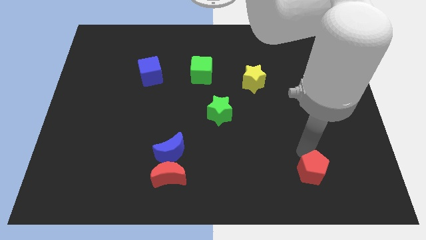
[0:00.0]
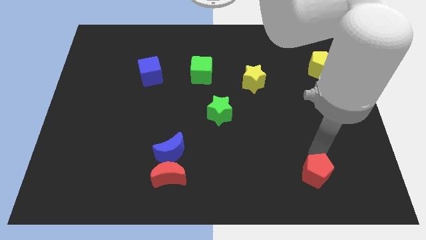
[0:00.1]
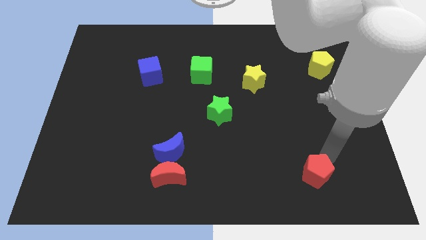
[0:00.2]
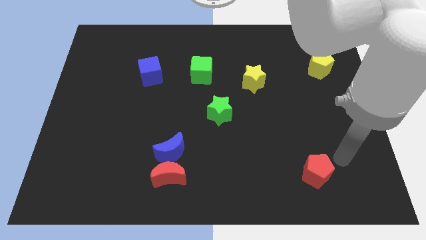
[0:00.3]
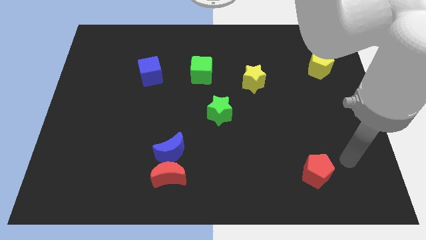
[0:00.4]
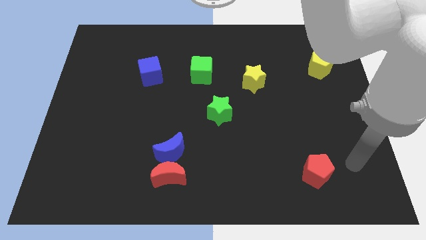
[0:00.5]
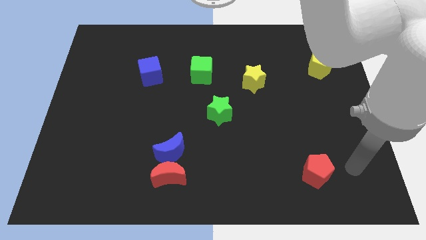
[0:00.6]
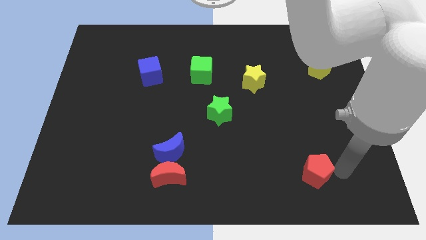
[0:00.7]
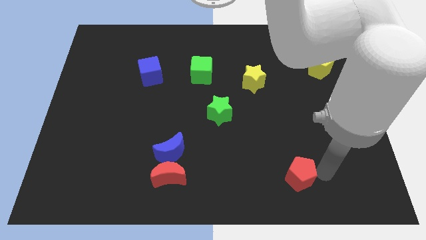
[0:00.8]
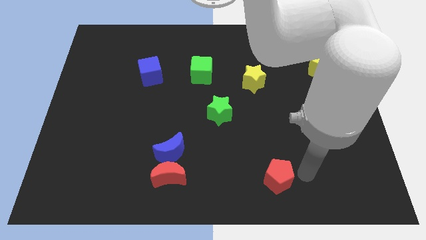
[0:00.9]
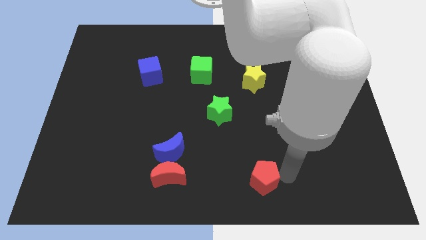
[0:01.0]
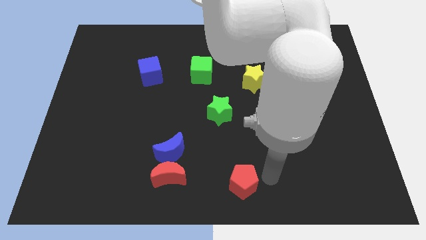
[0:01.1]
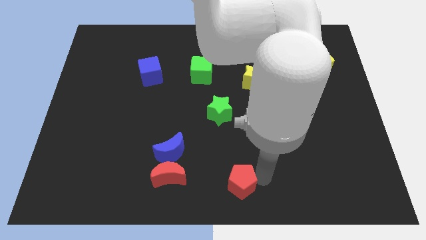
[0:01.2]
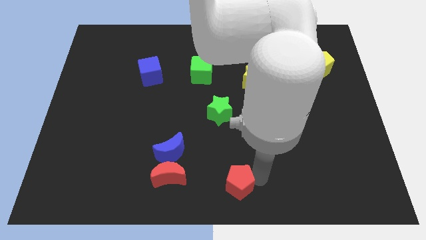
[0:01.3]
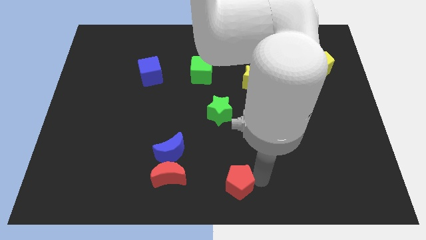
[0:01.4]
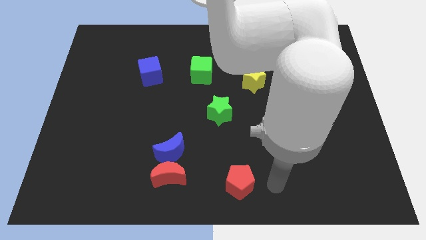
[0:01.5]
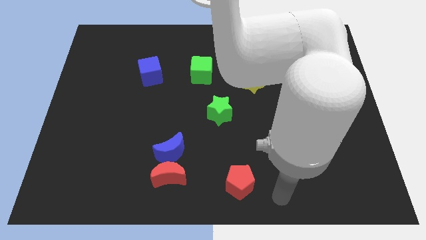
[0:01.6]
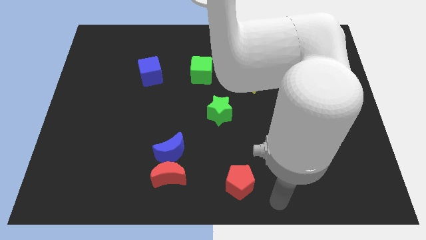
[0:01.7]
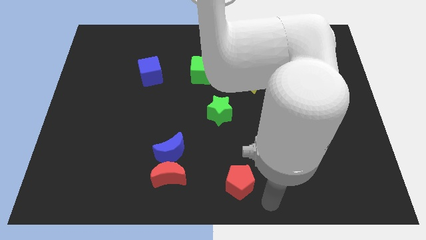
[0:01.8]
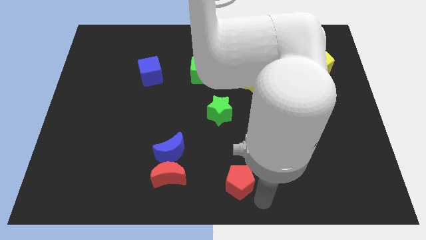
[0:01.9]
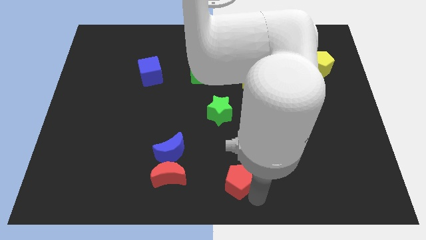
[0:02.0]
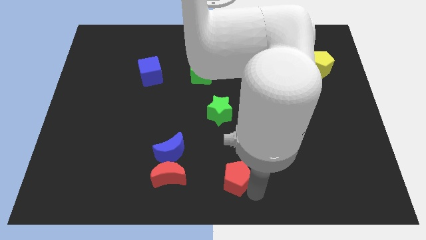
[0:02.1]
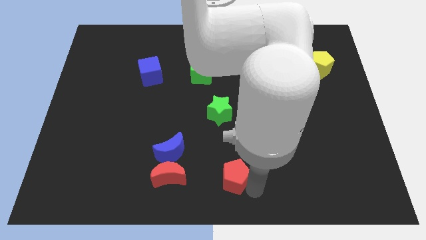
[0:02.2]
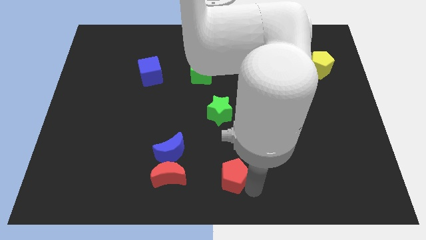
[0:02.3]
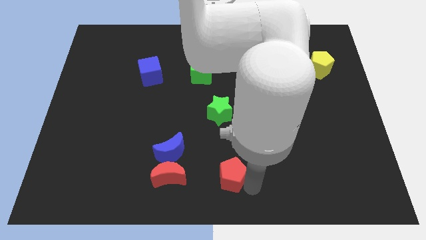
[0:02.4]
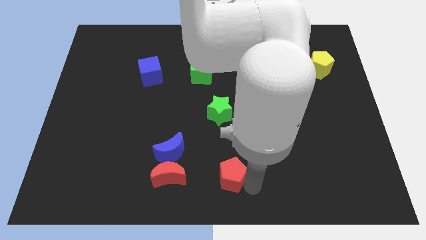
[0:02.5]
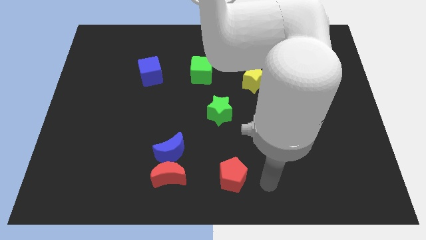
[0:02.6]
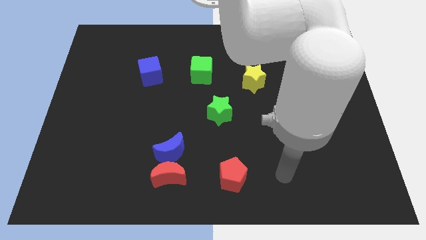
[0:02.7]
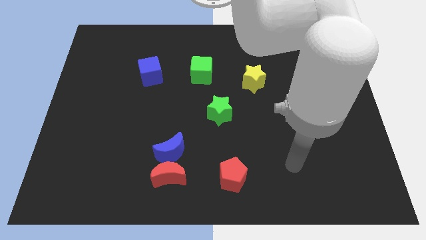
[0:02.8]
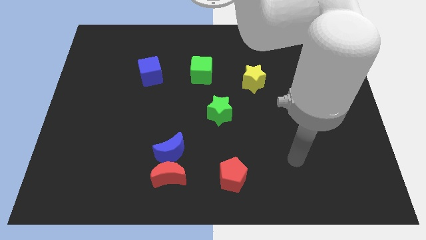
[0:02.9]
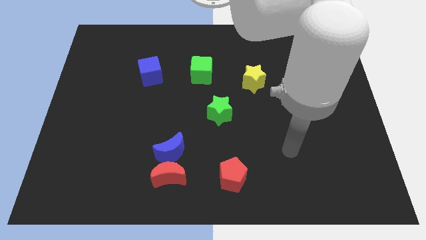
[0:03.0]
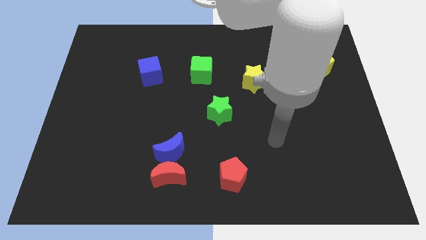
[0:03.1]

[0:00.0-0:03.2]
push red pentagon towards red moon

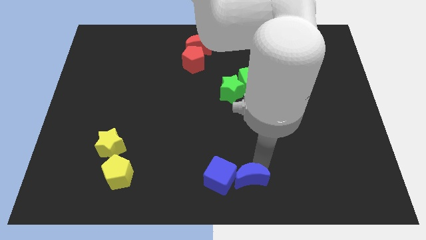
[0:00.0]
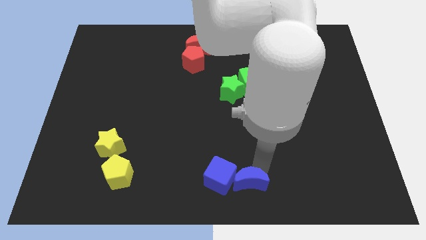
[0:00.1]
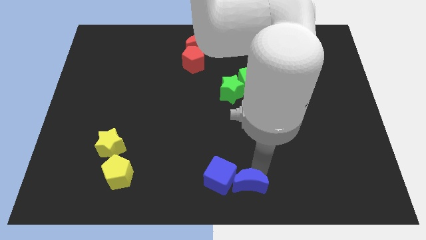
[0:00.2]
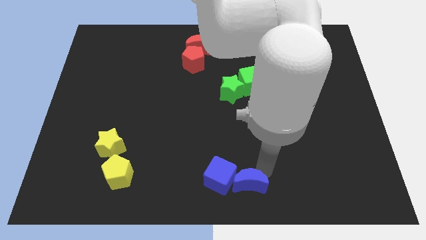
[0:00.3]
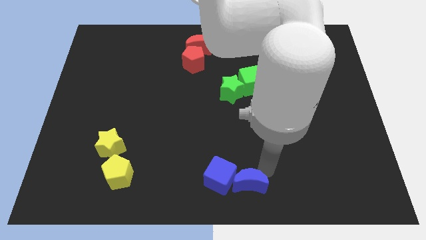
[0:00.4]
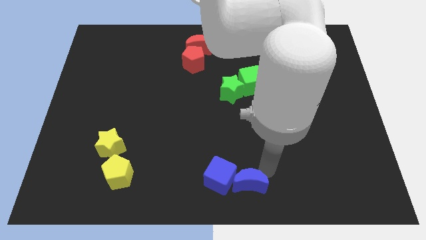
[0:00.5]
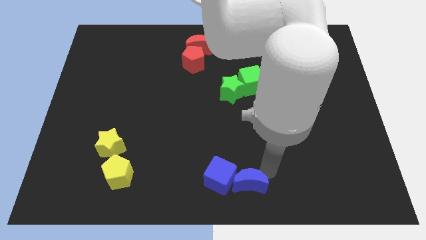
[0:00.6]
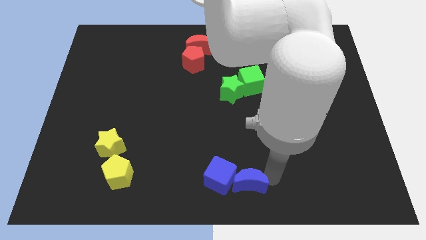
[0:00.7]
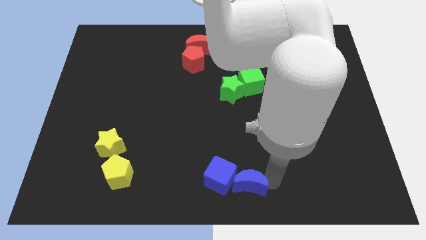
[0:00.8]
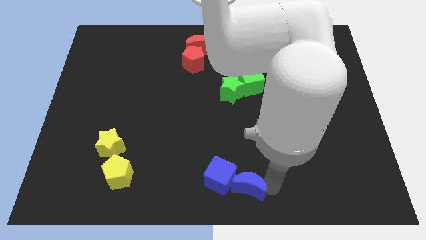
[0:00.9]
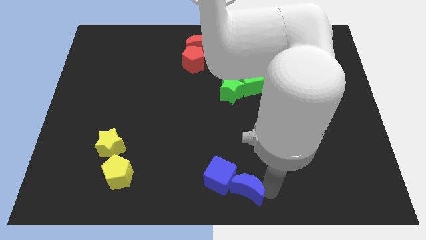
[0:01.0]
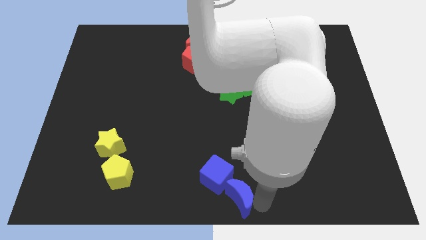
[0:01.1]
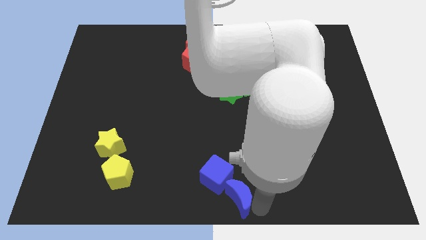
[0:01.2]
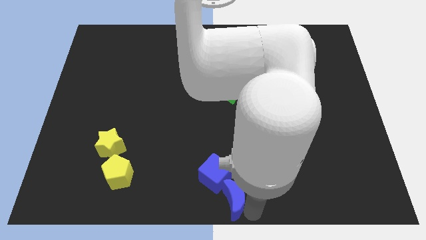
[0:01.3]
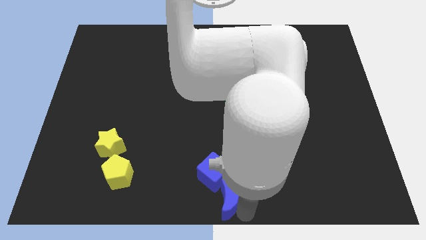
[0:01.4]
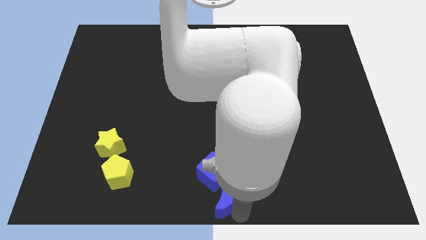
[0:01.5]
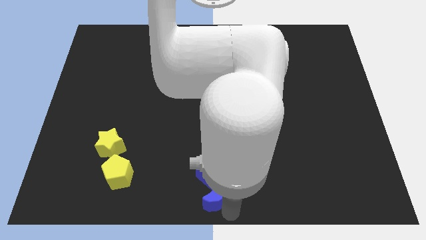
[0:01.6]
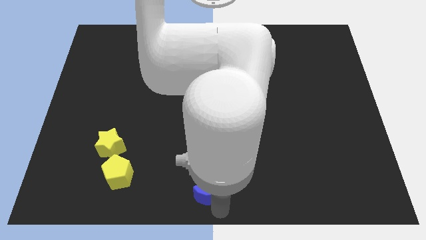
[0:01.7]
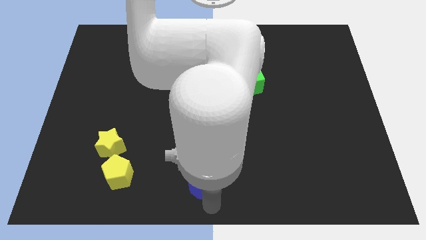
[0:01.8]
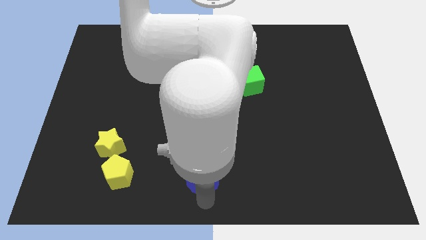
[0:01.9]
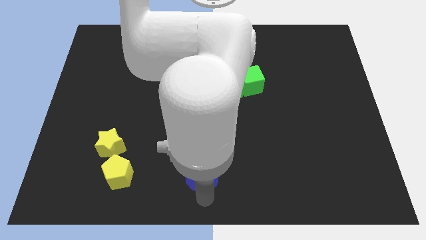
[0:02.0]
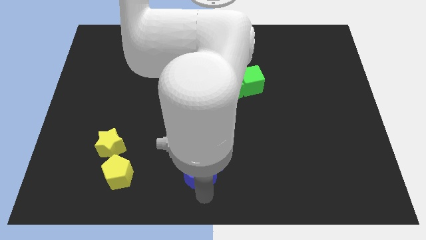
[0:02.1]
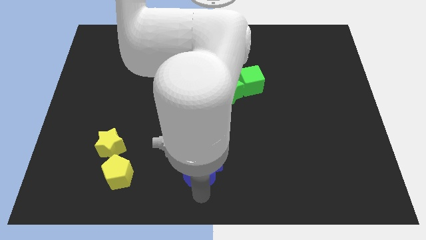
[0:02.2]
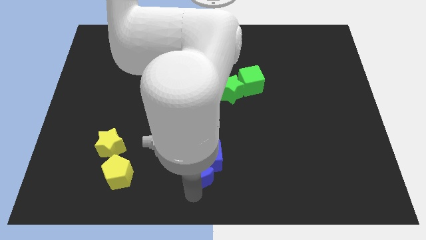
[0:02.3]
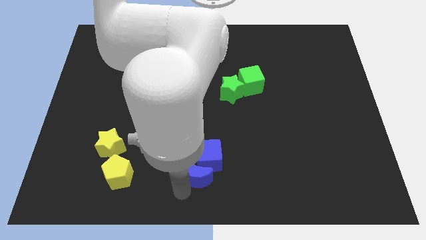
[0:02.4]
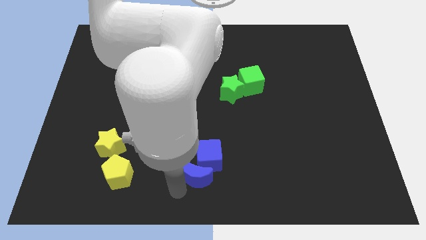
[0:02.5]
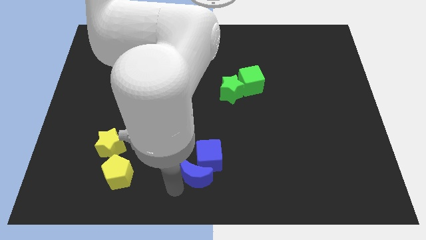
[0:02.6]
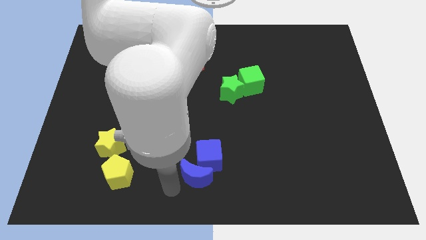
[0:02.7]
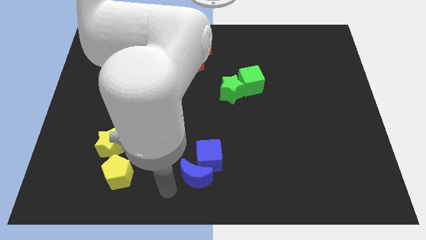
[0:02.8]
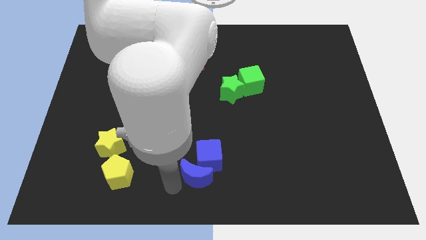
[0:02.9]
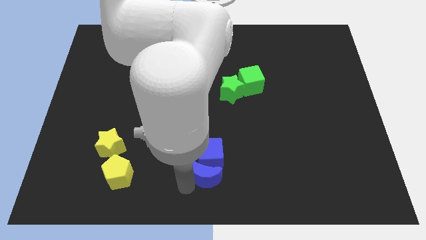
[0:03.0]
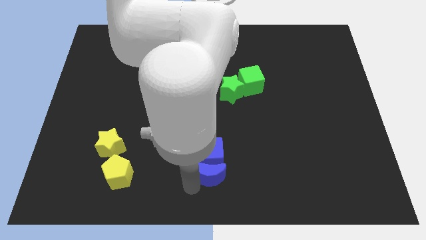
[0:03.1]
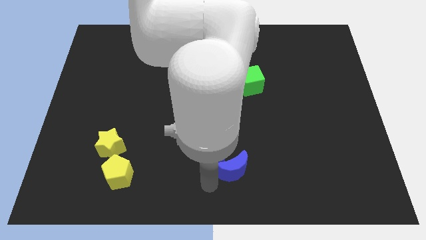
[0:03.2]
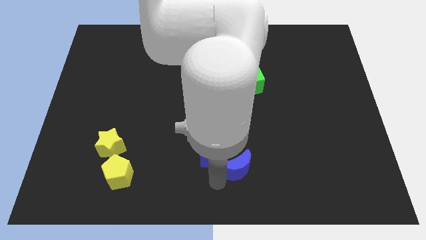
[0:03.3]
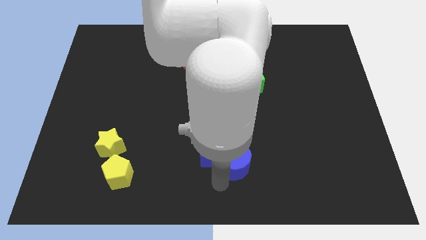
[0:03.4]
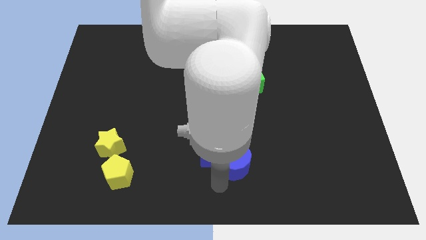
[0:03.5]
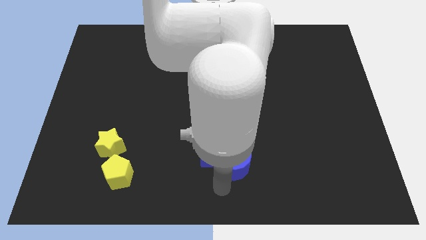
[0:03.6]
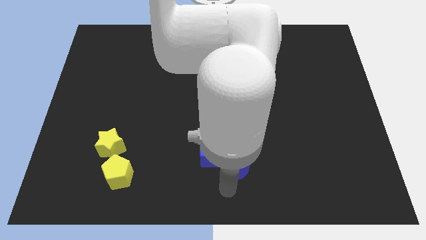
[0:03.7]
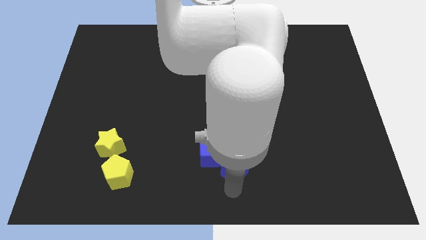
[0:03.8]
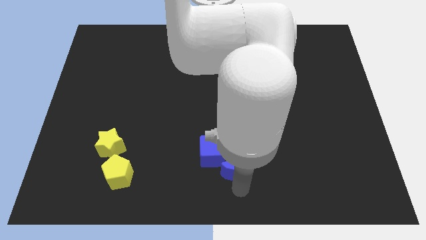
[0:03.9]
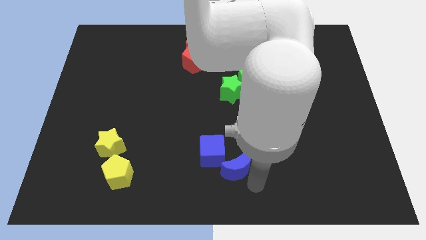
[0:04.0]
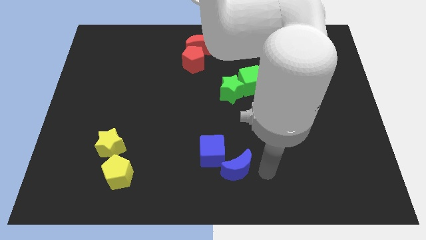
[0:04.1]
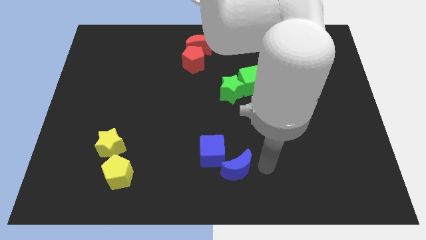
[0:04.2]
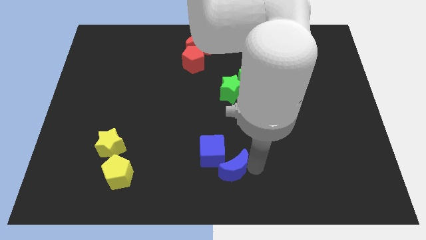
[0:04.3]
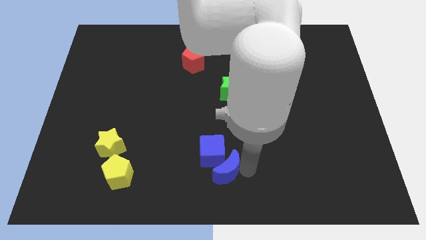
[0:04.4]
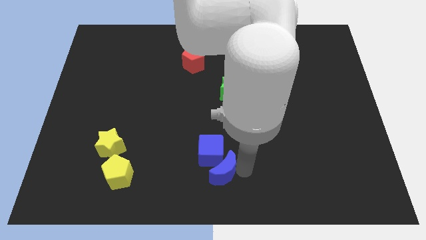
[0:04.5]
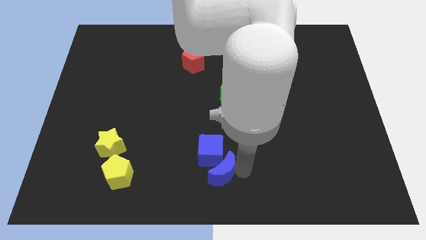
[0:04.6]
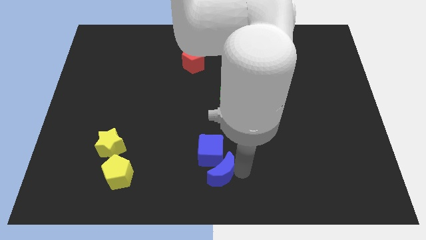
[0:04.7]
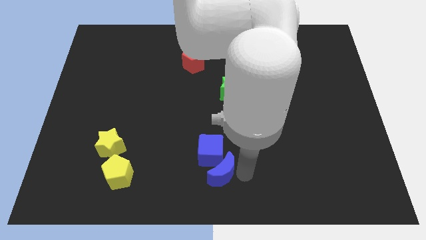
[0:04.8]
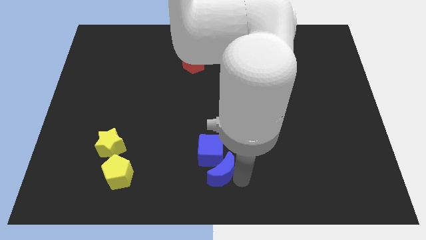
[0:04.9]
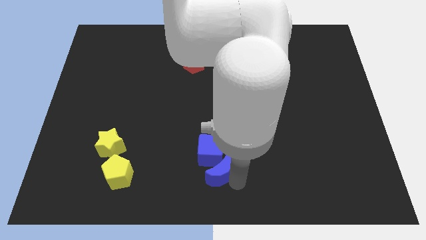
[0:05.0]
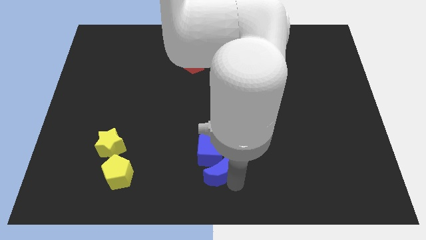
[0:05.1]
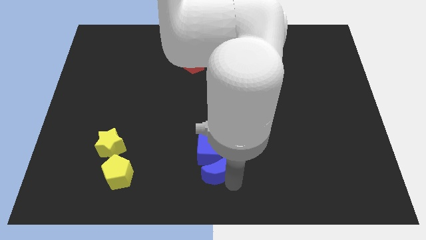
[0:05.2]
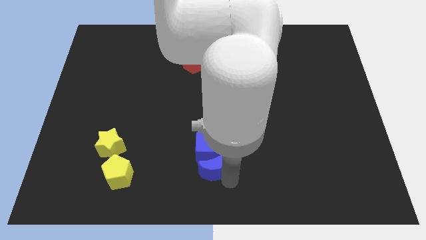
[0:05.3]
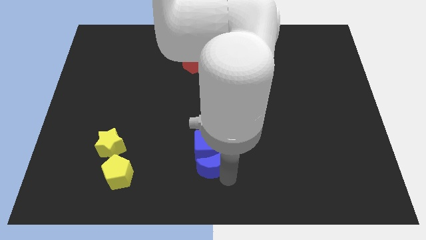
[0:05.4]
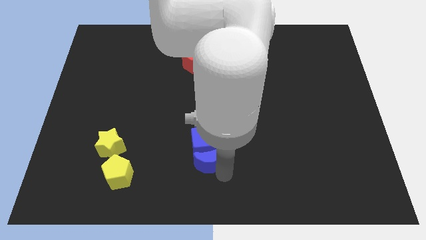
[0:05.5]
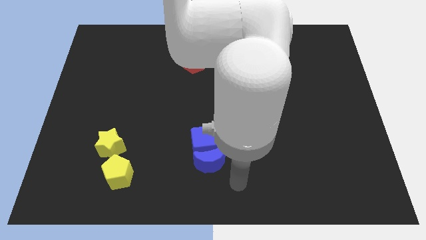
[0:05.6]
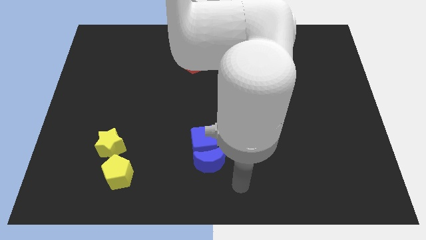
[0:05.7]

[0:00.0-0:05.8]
move blue blocks towards top side

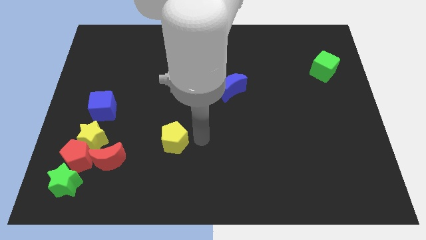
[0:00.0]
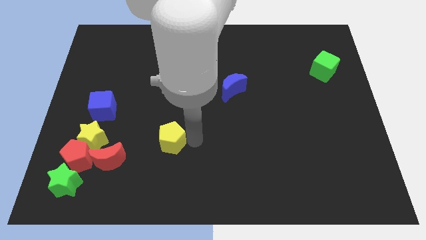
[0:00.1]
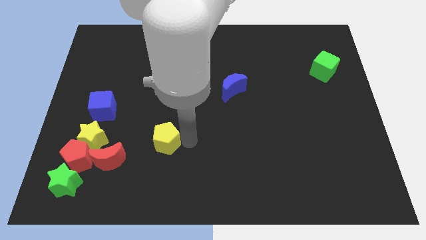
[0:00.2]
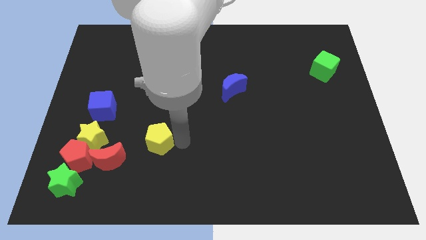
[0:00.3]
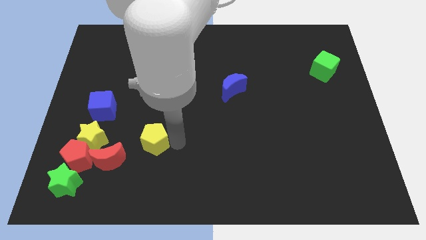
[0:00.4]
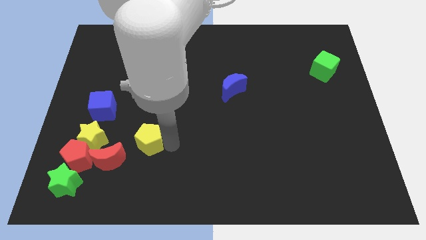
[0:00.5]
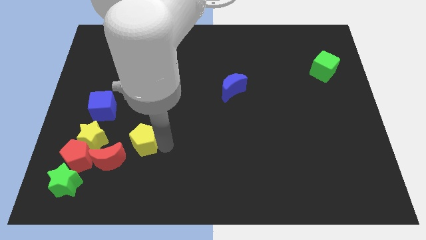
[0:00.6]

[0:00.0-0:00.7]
push the yellow pentagon to the left of the board
